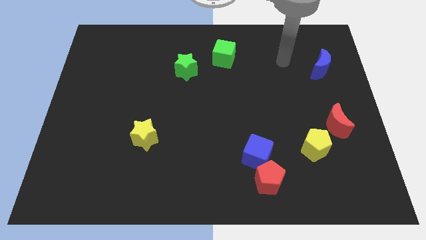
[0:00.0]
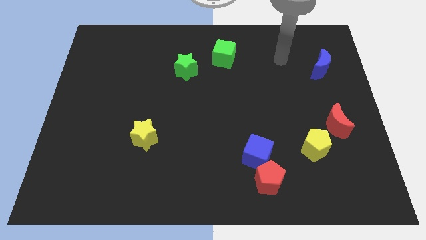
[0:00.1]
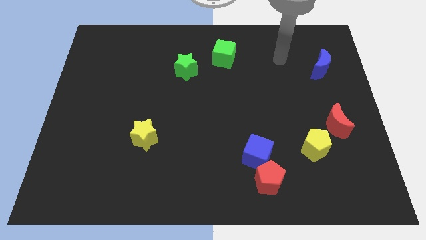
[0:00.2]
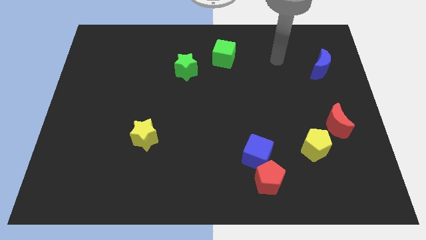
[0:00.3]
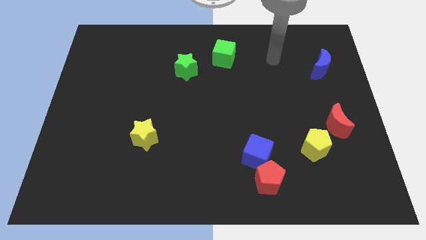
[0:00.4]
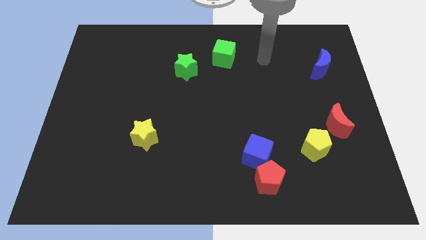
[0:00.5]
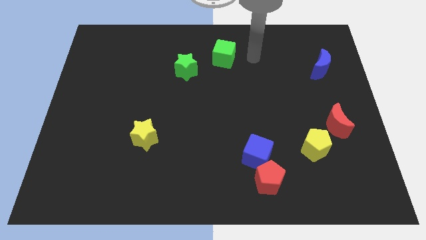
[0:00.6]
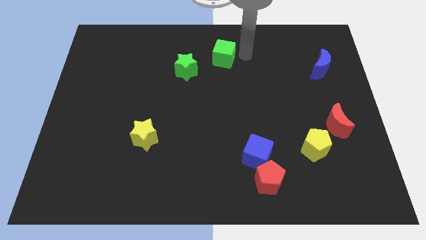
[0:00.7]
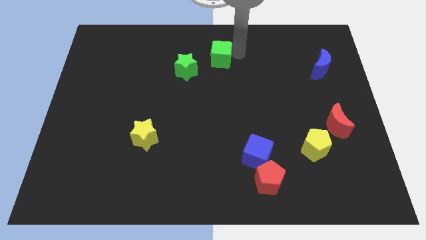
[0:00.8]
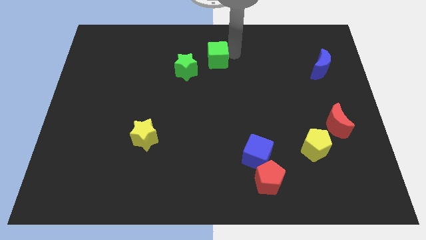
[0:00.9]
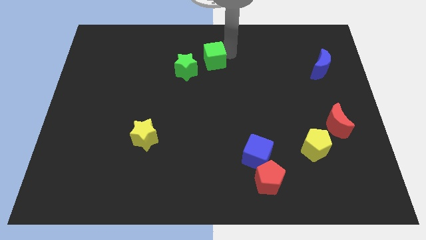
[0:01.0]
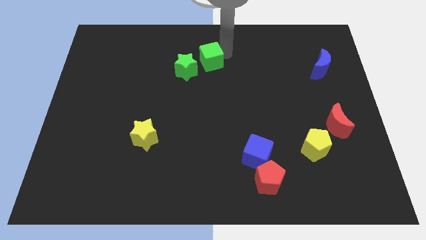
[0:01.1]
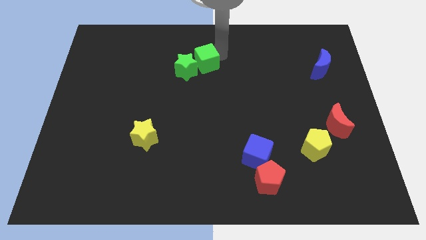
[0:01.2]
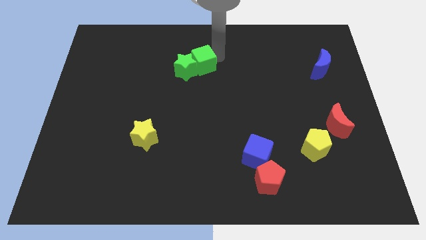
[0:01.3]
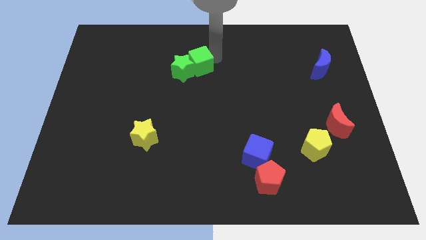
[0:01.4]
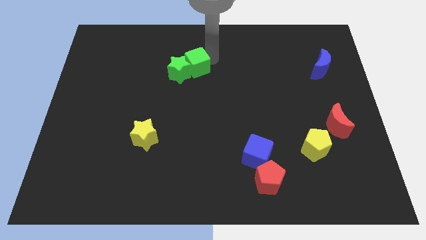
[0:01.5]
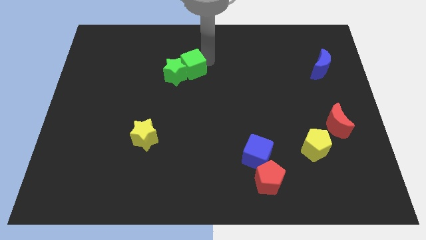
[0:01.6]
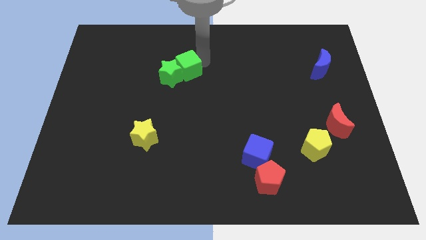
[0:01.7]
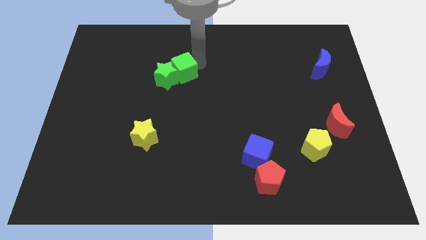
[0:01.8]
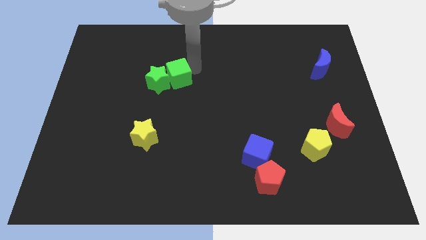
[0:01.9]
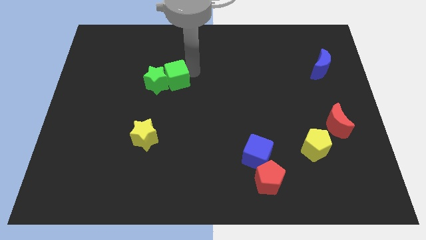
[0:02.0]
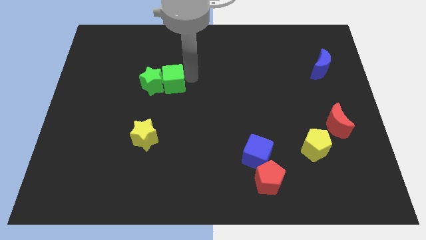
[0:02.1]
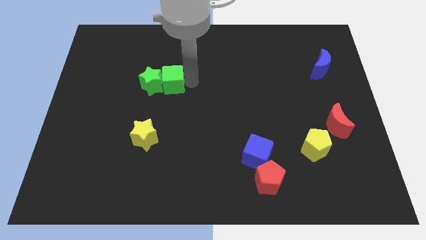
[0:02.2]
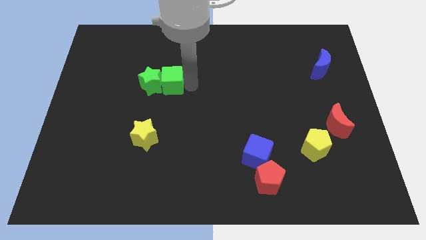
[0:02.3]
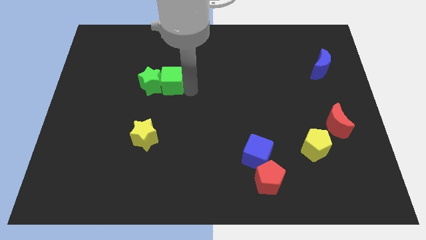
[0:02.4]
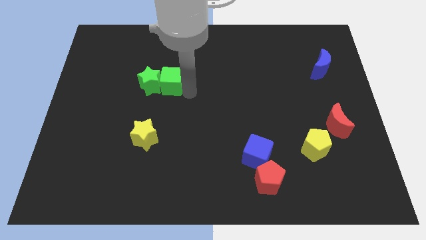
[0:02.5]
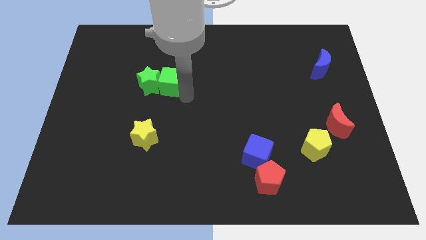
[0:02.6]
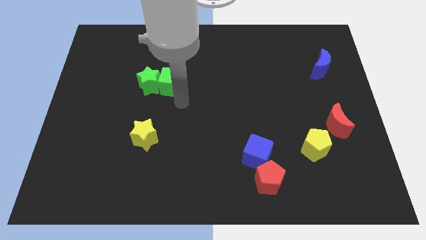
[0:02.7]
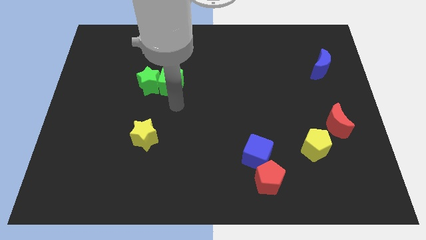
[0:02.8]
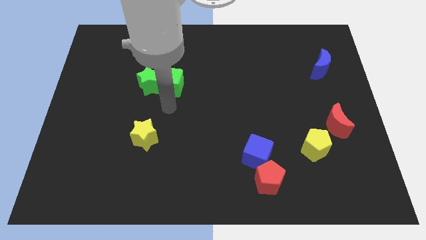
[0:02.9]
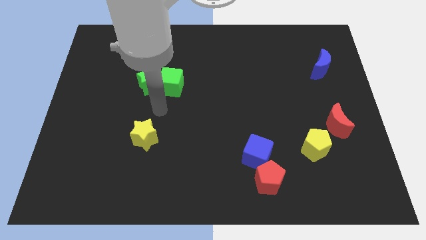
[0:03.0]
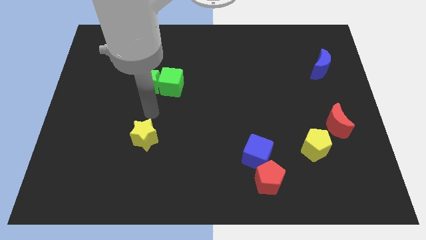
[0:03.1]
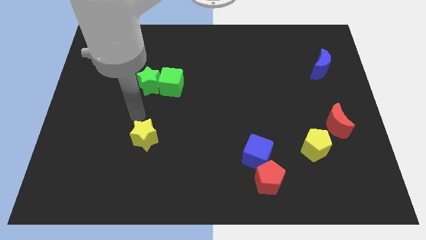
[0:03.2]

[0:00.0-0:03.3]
push the green cube to the right of the green star

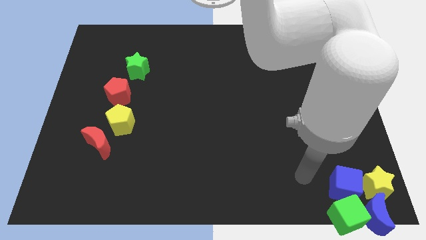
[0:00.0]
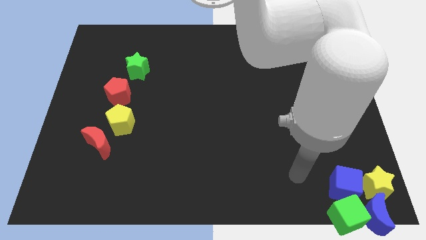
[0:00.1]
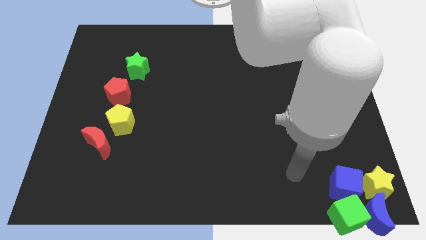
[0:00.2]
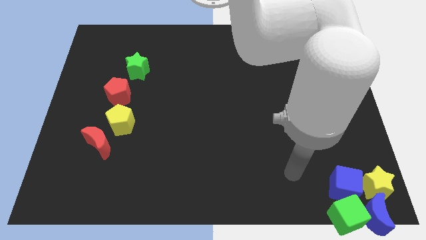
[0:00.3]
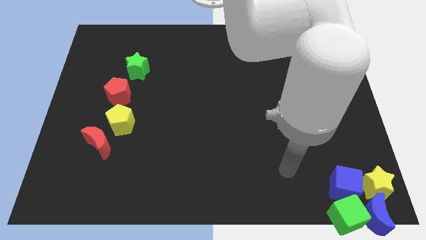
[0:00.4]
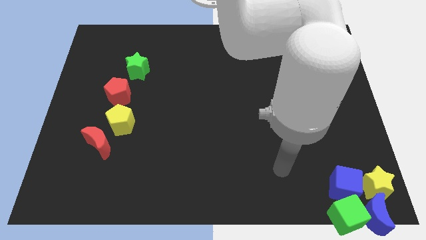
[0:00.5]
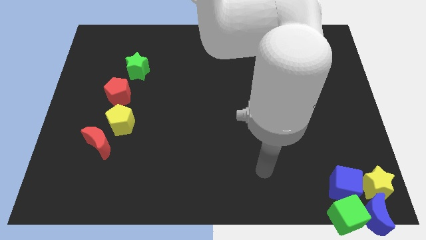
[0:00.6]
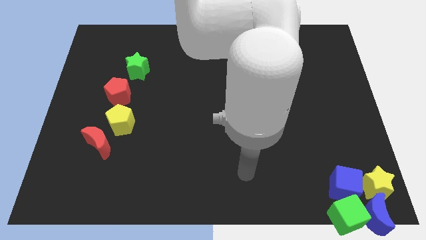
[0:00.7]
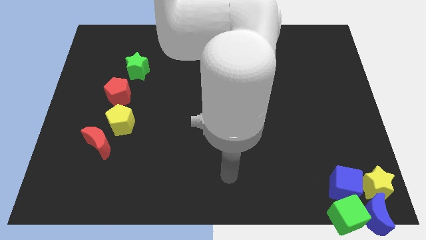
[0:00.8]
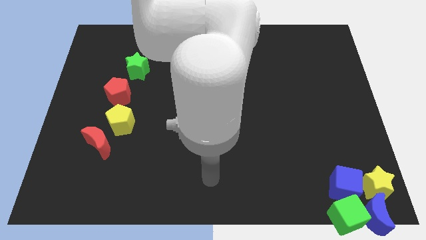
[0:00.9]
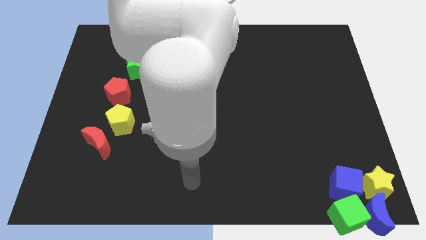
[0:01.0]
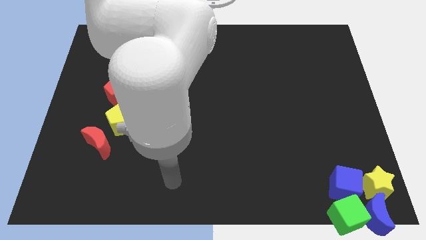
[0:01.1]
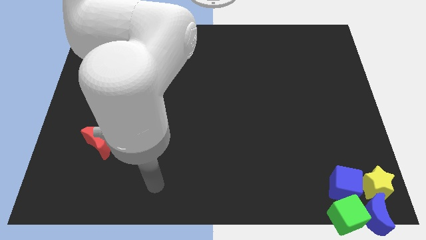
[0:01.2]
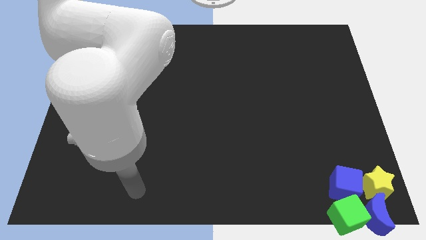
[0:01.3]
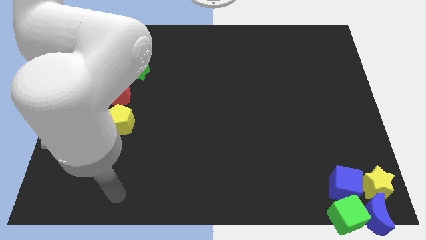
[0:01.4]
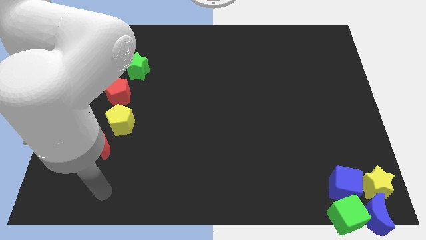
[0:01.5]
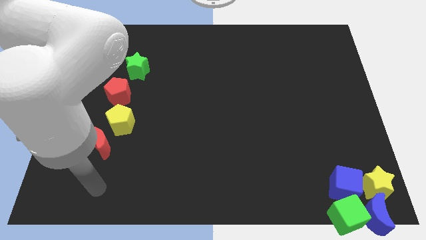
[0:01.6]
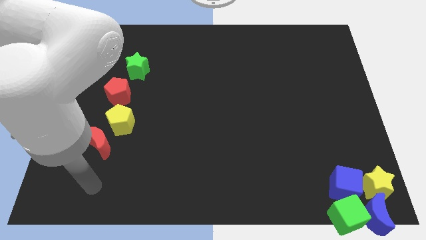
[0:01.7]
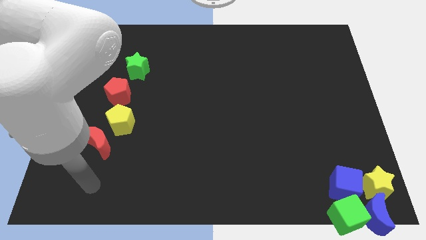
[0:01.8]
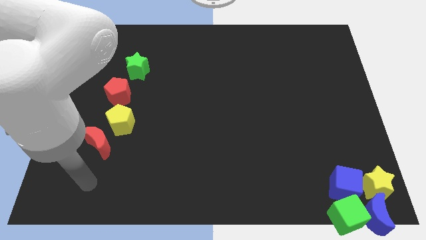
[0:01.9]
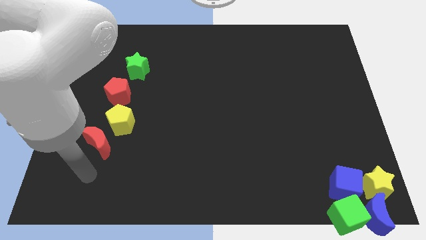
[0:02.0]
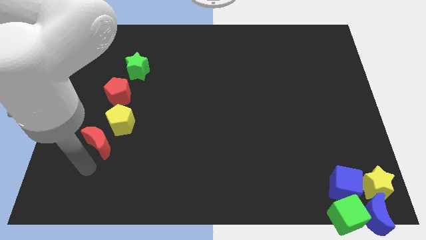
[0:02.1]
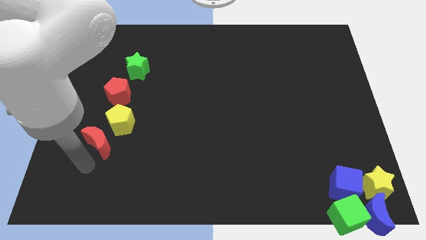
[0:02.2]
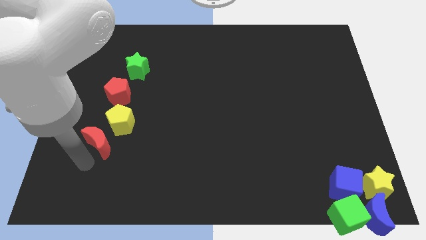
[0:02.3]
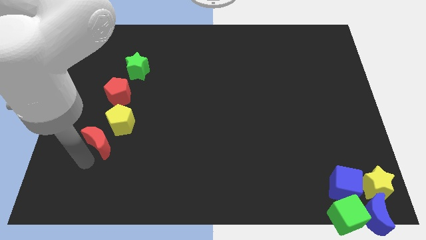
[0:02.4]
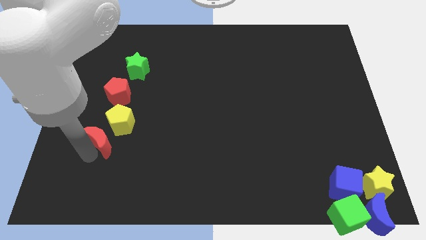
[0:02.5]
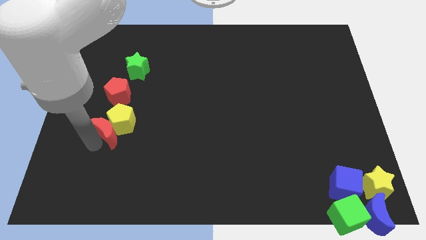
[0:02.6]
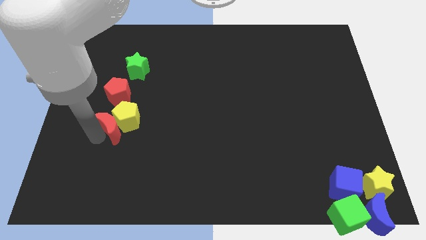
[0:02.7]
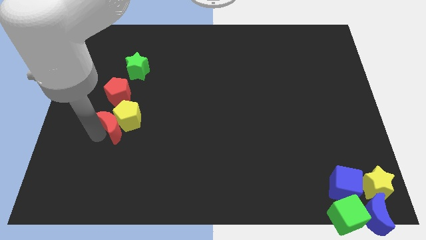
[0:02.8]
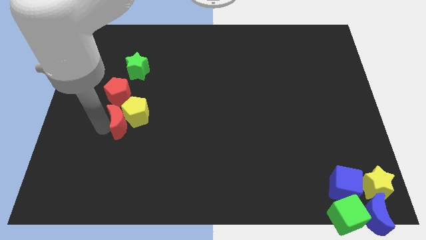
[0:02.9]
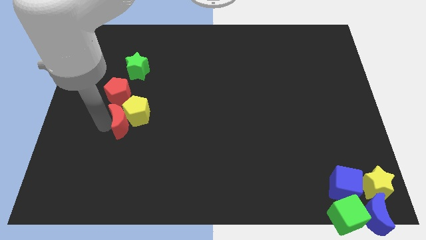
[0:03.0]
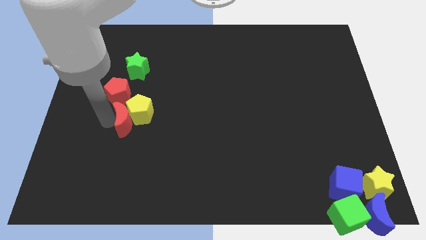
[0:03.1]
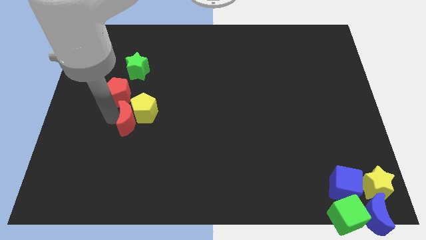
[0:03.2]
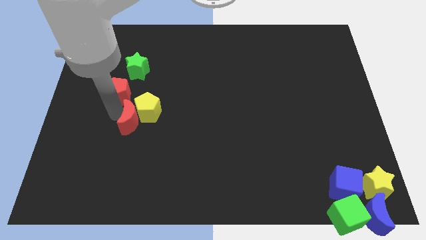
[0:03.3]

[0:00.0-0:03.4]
push the red crescent into the yellow pentagon

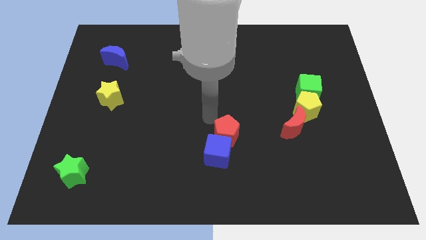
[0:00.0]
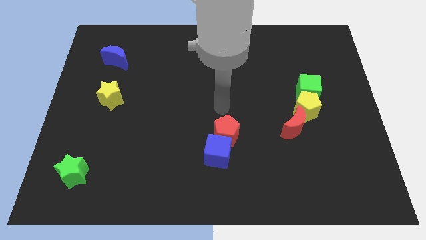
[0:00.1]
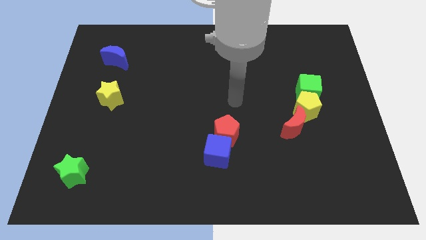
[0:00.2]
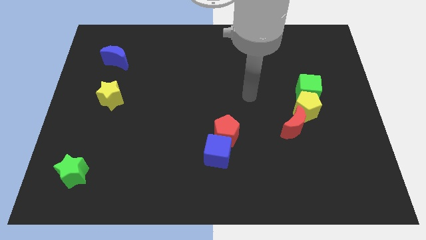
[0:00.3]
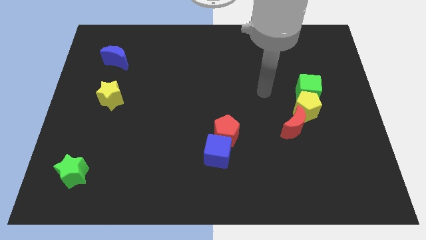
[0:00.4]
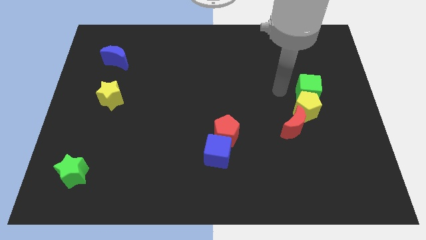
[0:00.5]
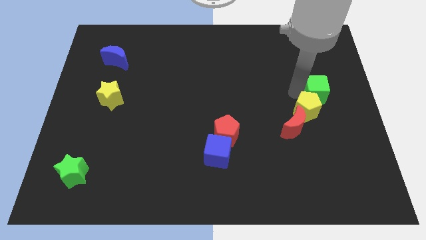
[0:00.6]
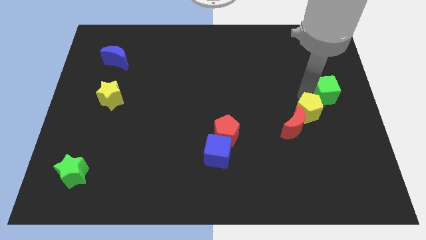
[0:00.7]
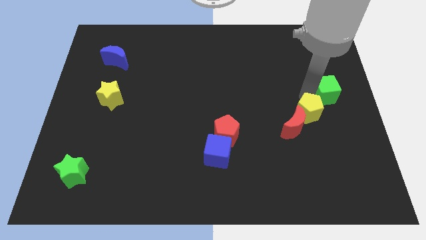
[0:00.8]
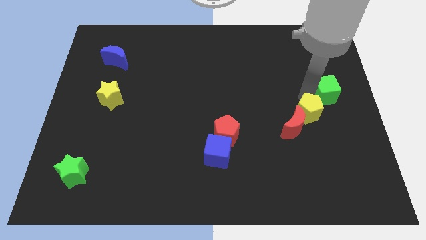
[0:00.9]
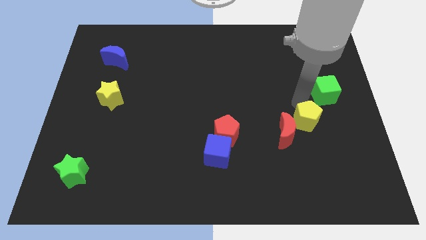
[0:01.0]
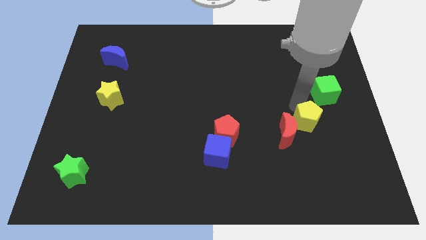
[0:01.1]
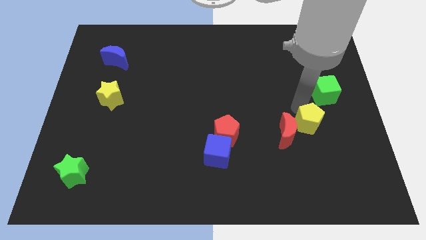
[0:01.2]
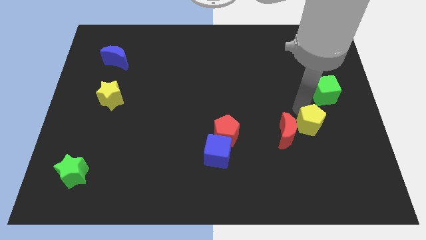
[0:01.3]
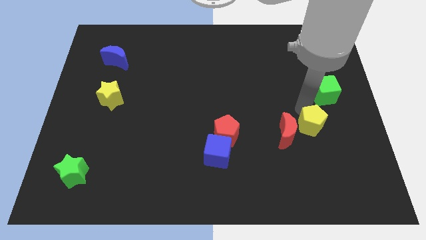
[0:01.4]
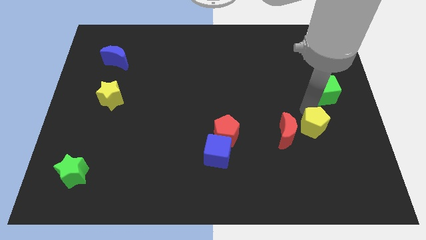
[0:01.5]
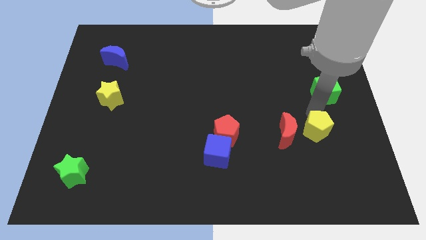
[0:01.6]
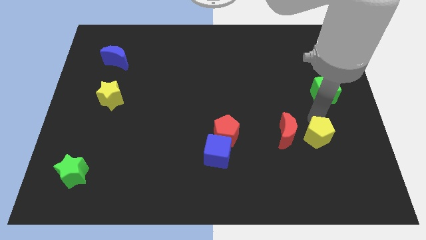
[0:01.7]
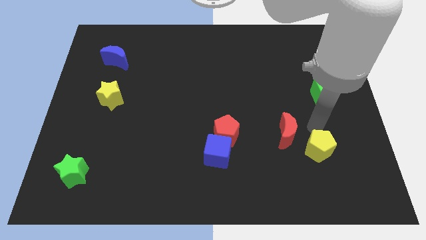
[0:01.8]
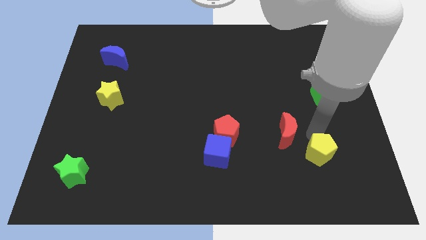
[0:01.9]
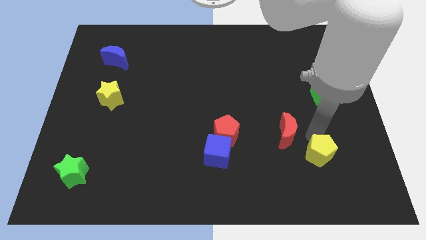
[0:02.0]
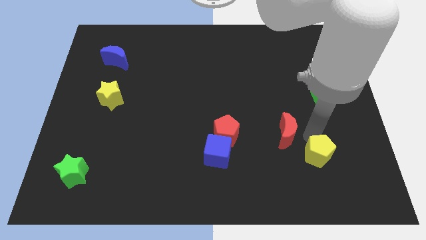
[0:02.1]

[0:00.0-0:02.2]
separate the yellow pentagon from the green square

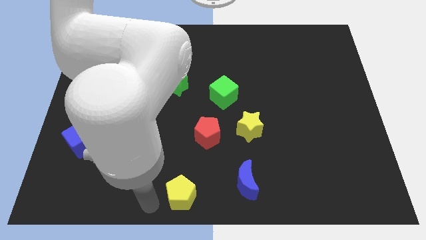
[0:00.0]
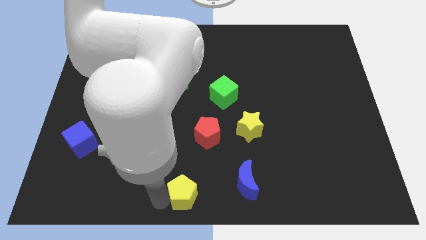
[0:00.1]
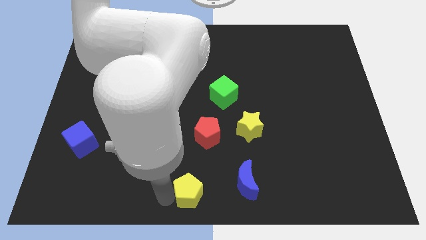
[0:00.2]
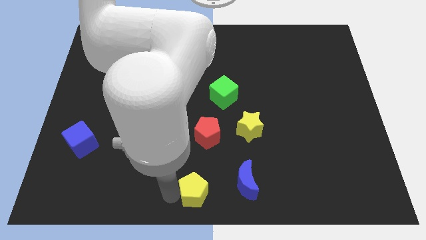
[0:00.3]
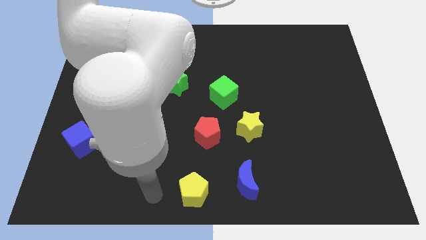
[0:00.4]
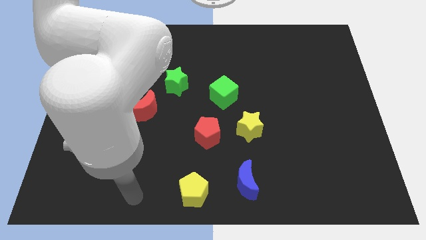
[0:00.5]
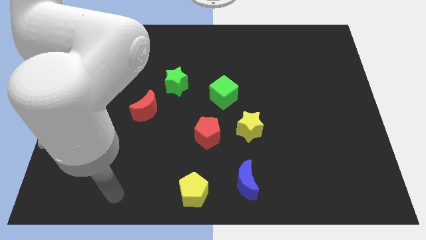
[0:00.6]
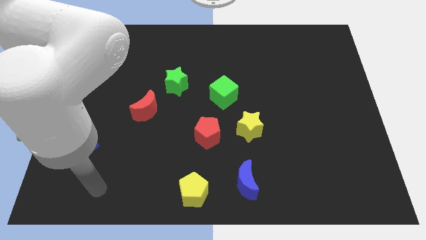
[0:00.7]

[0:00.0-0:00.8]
place yellow pentagon below red pentagon
